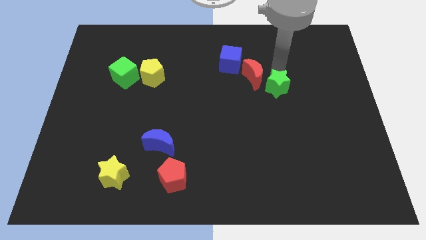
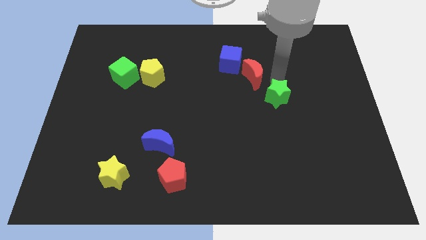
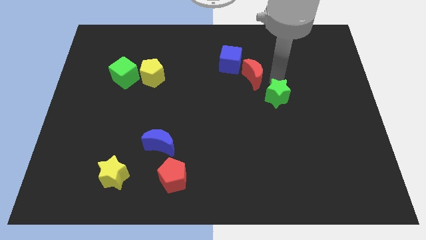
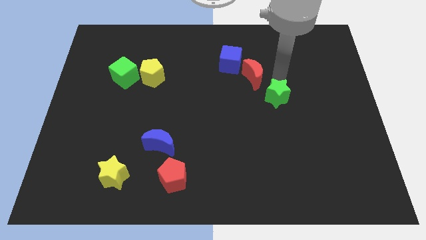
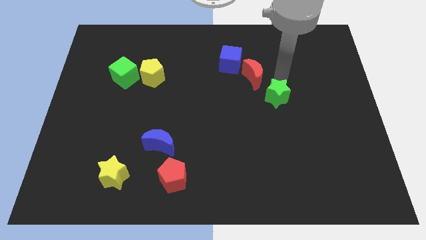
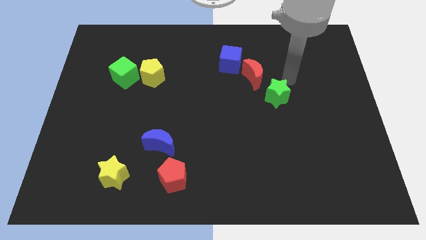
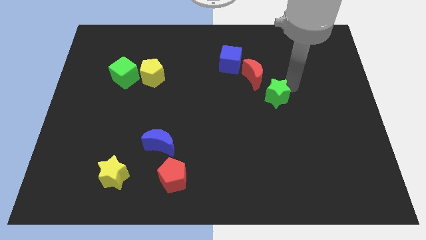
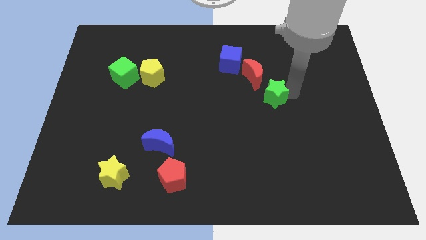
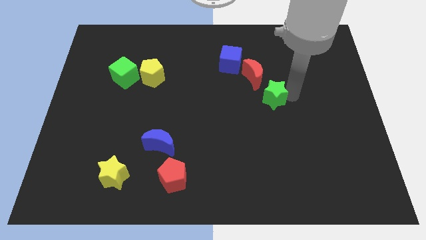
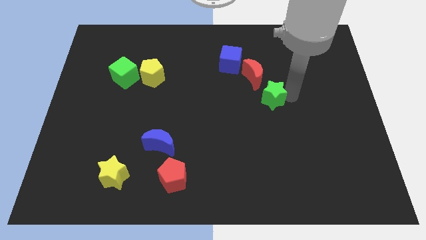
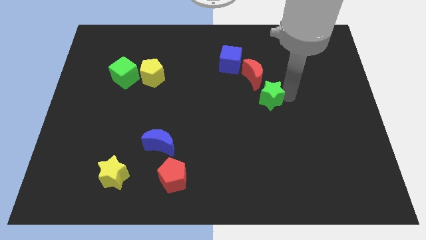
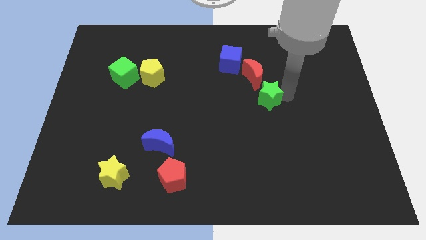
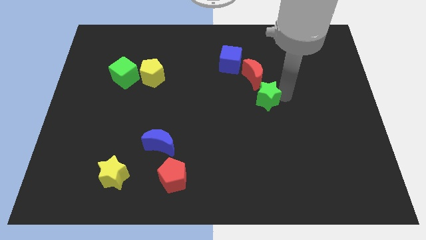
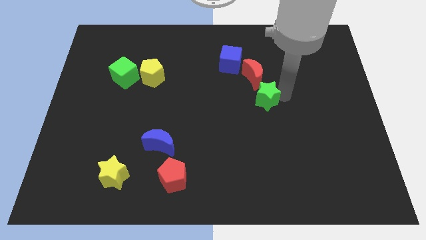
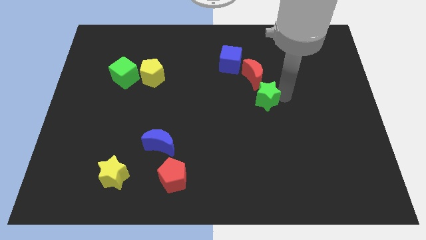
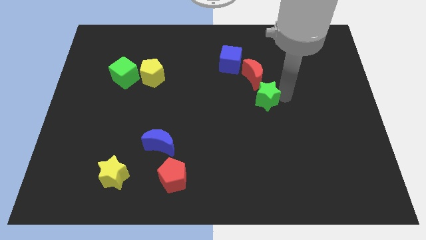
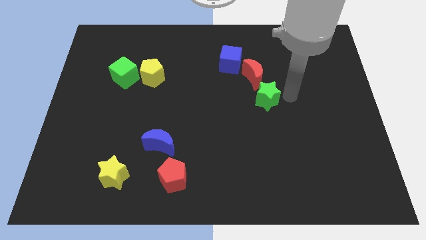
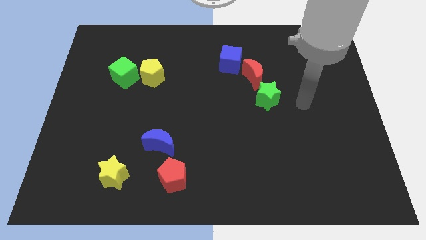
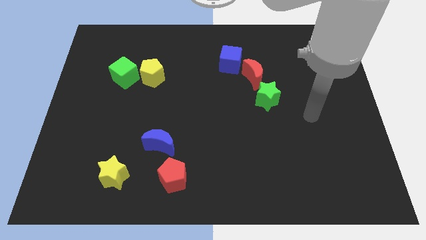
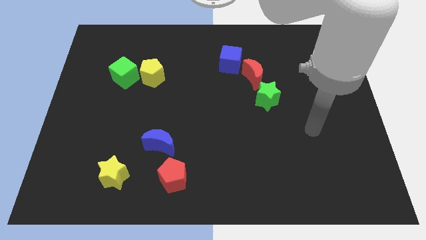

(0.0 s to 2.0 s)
place green star below the red moon

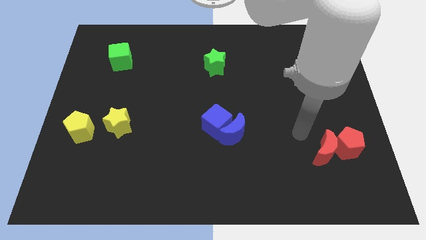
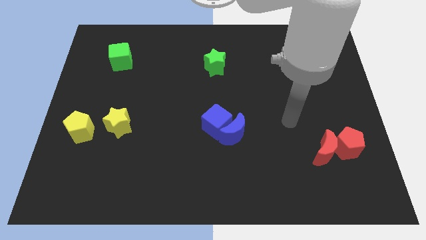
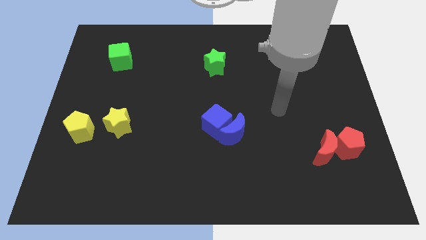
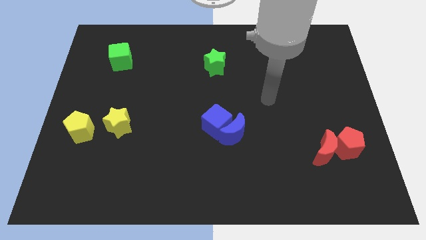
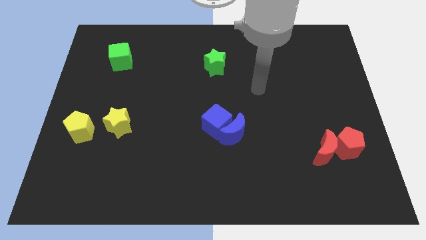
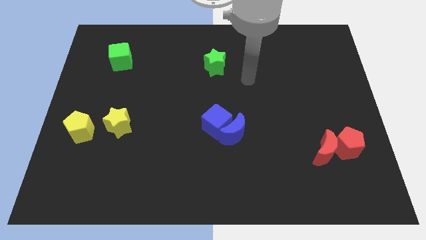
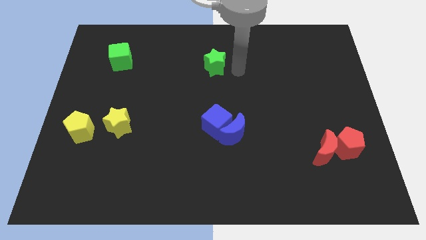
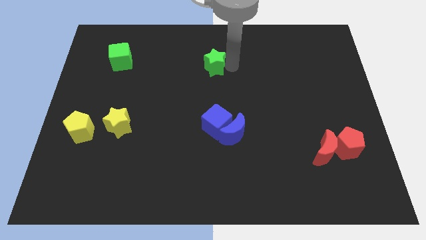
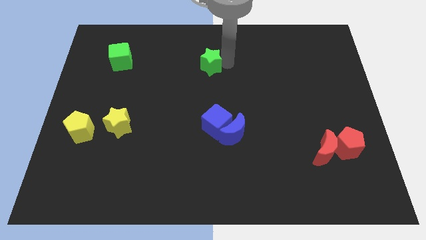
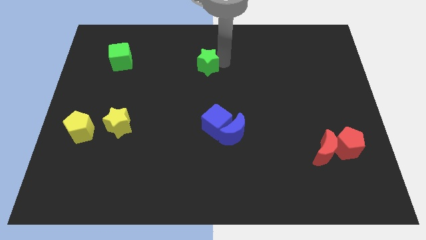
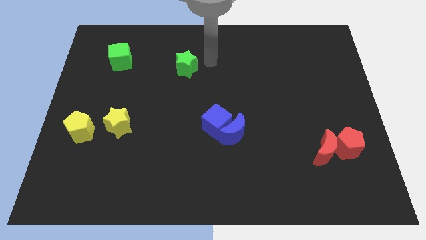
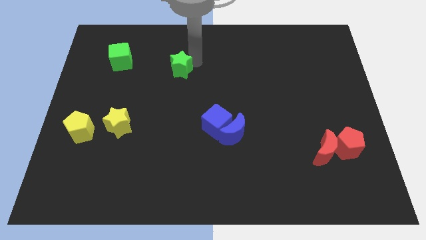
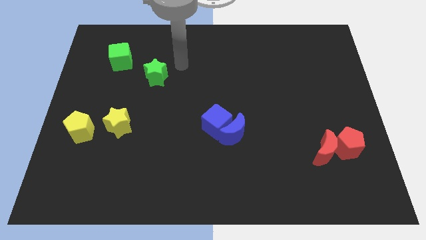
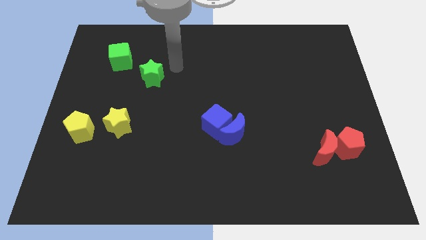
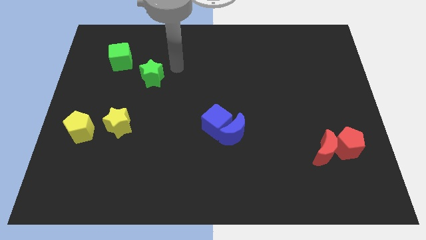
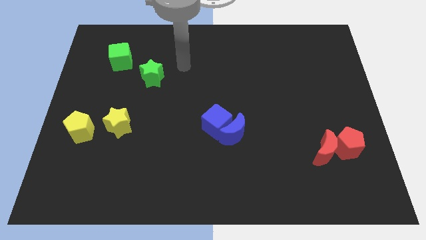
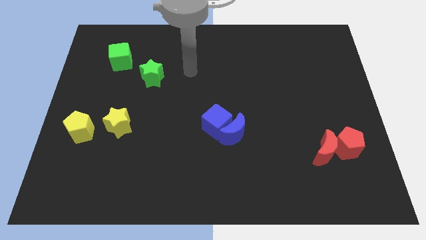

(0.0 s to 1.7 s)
push the green star towards the bottom right of the green cube

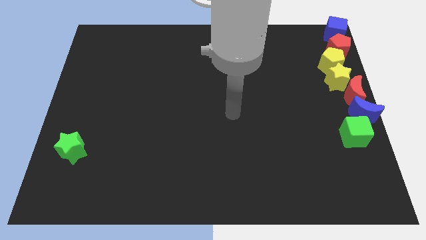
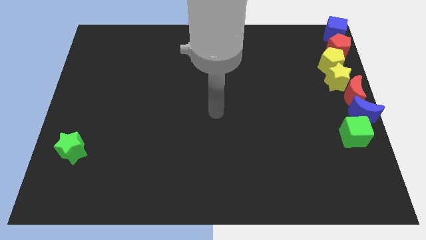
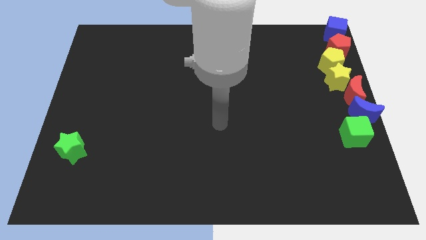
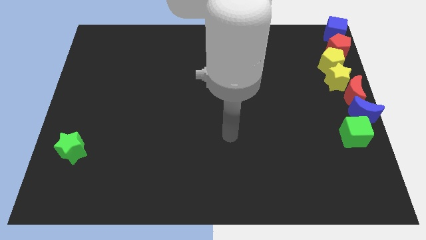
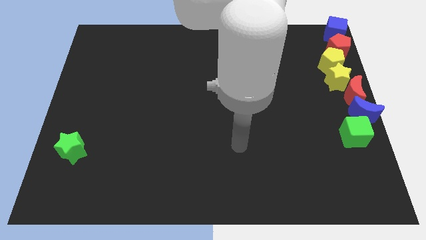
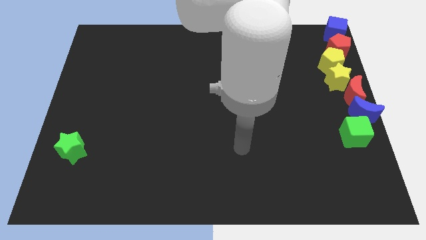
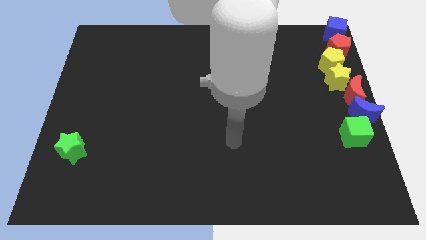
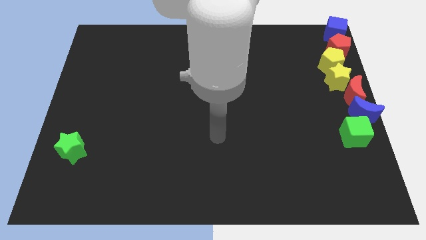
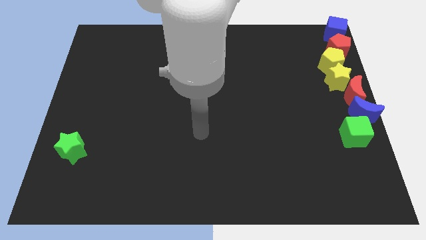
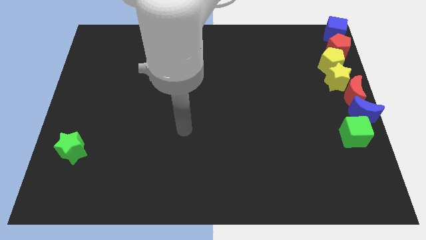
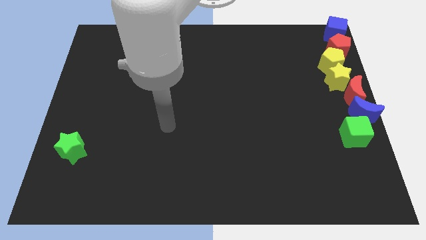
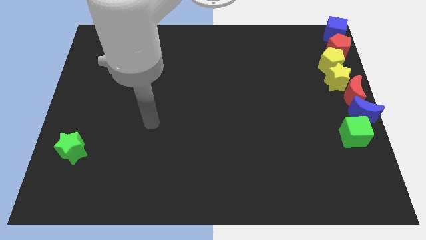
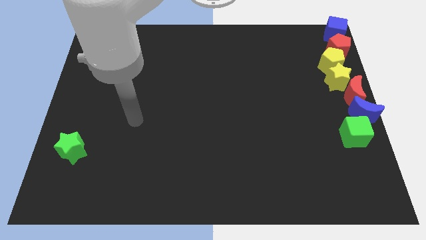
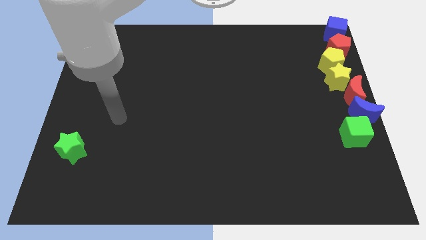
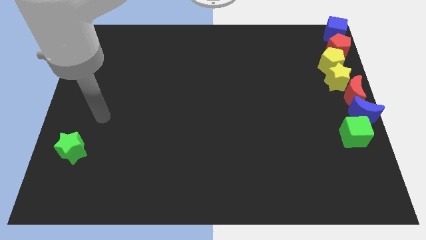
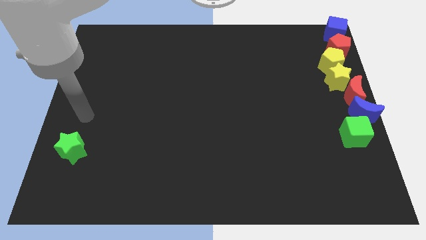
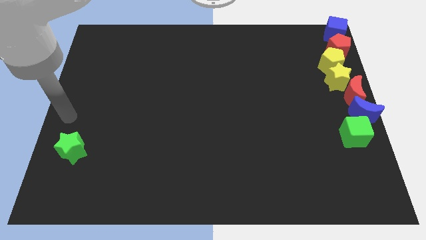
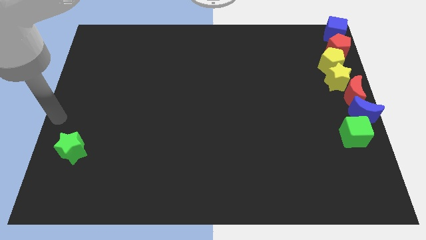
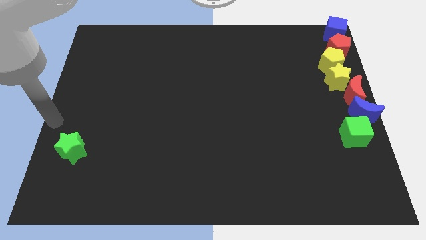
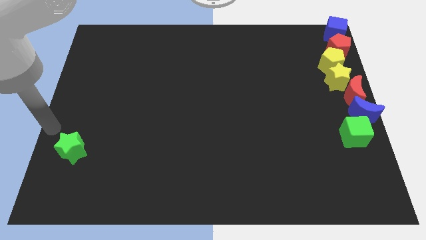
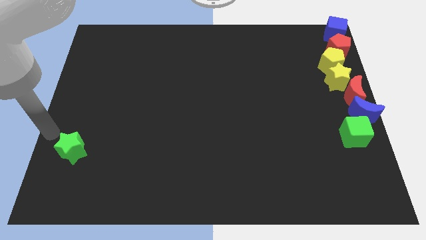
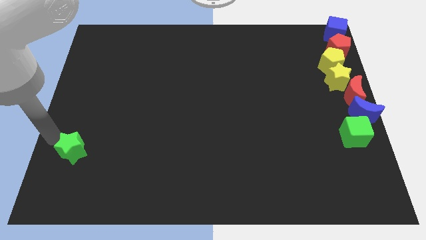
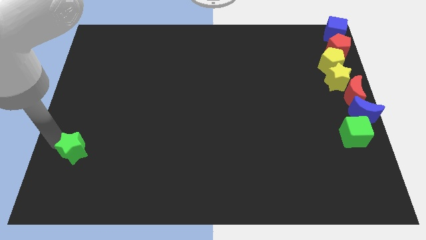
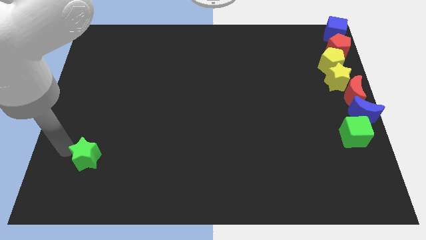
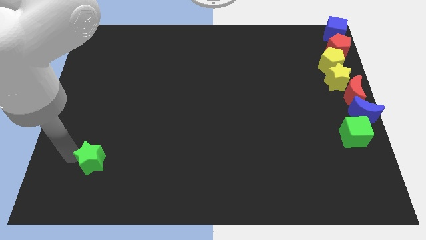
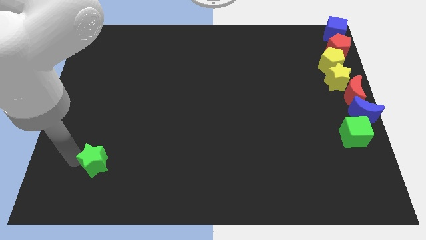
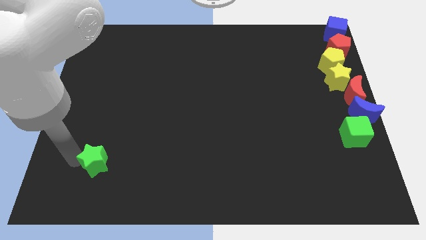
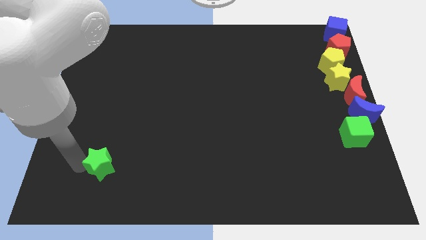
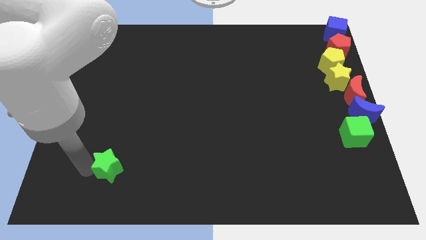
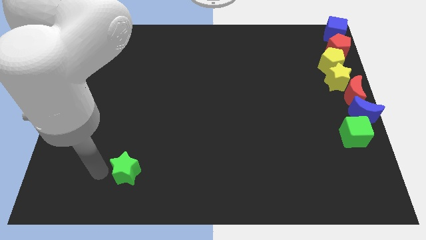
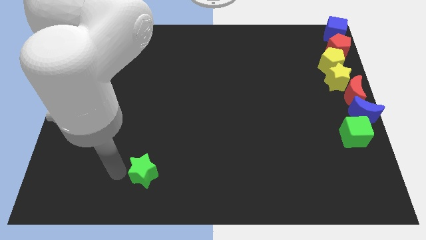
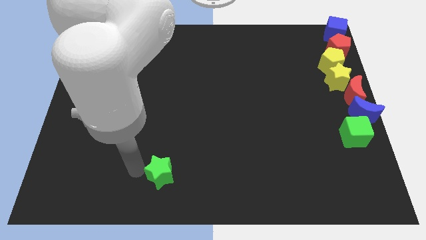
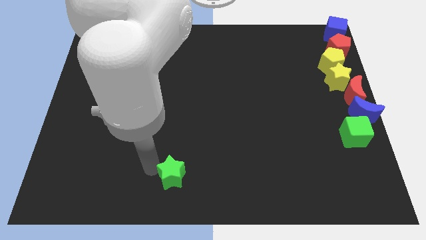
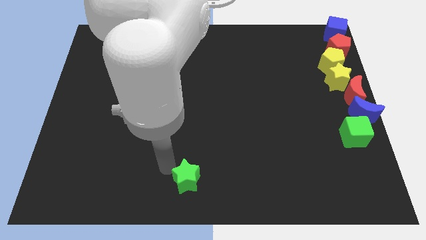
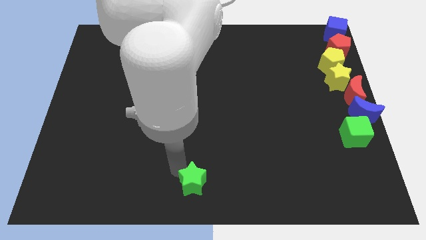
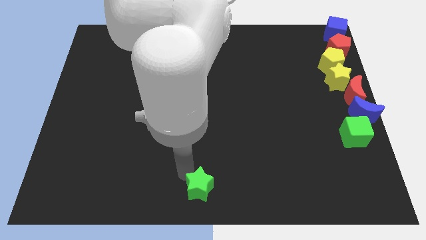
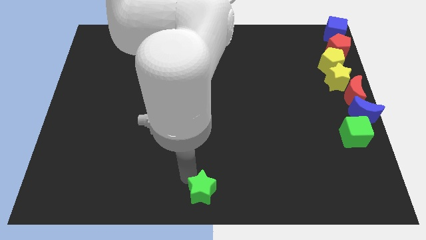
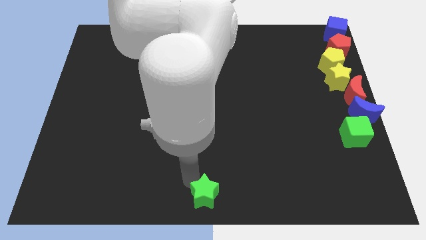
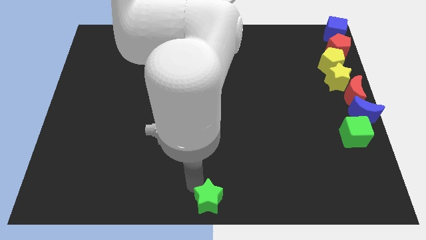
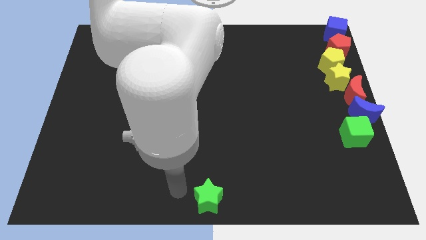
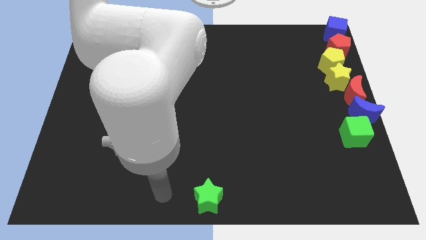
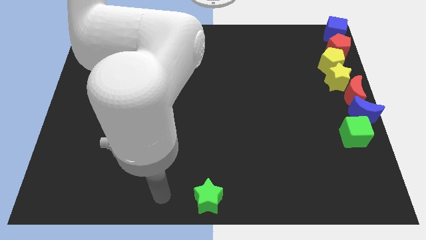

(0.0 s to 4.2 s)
place the green star at the bottom center of the board

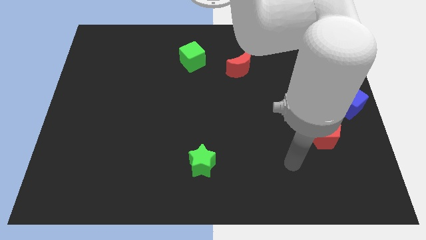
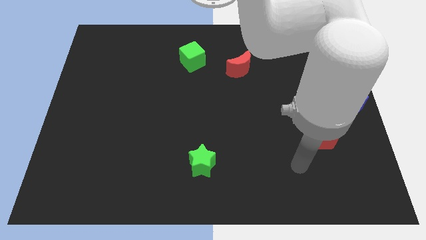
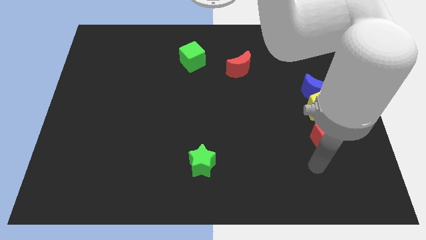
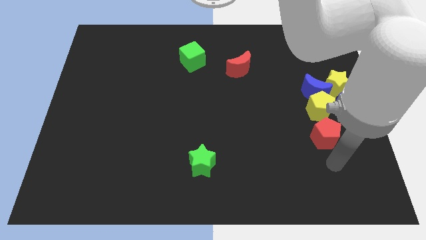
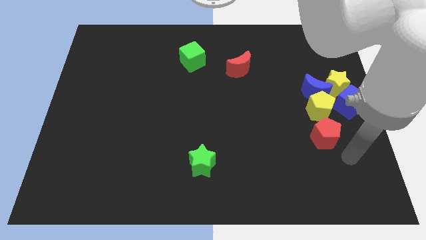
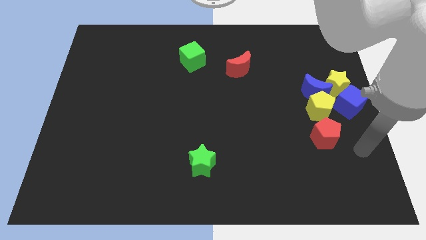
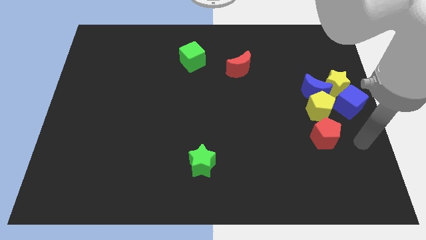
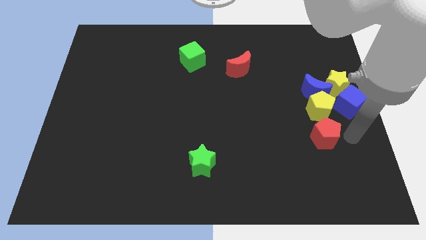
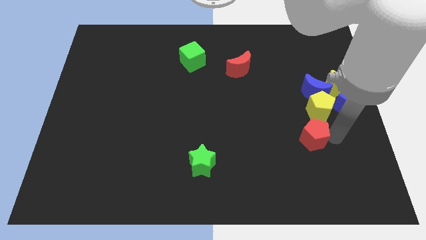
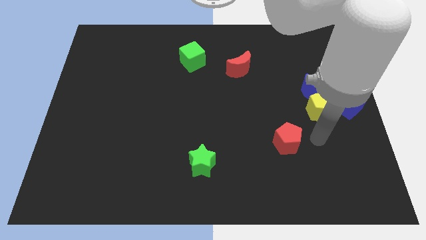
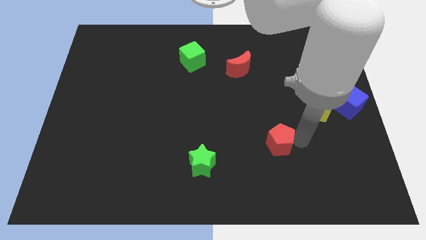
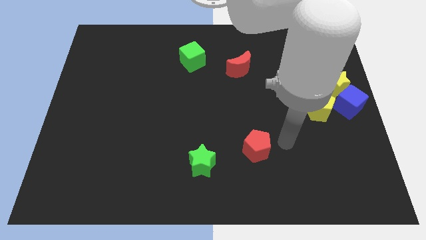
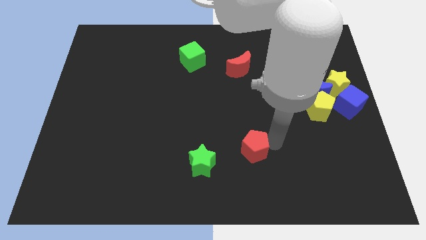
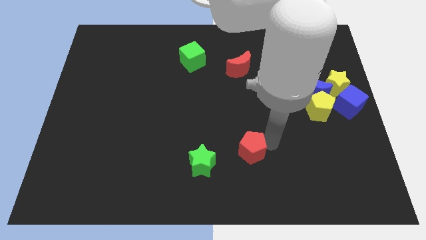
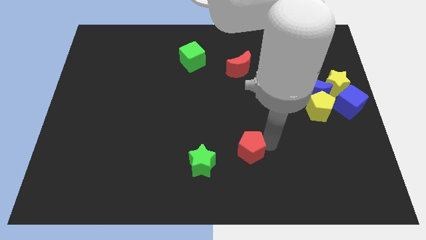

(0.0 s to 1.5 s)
place the red pentagon on the right side of the green star
